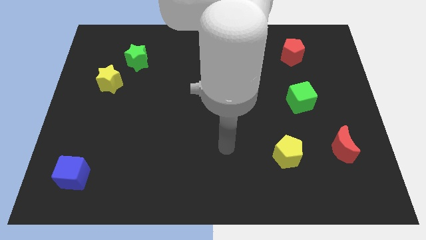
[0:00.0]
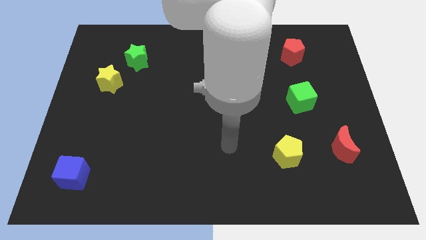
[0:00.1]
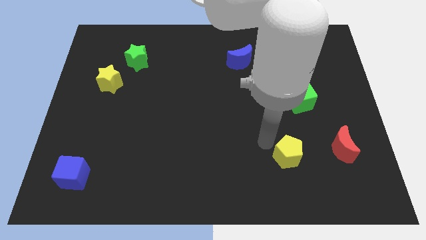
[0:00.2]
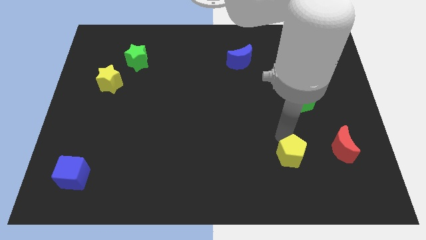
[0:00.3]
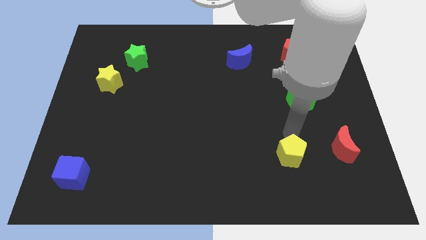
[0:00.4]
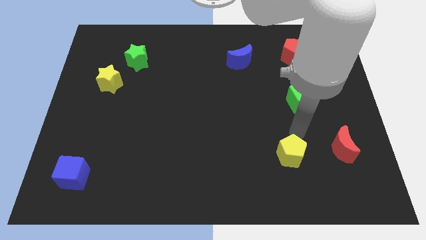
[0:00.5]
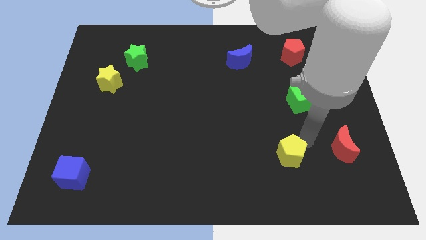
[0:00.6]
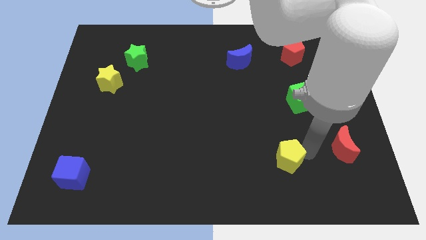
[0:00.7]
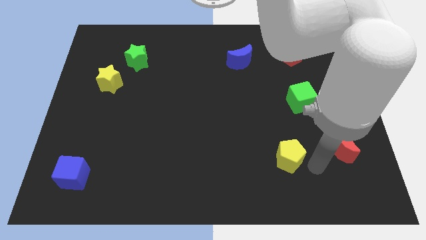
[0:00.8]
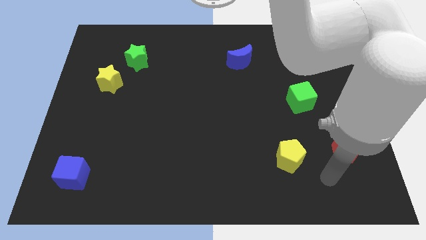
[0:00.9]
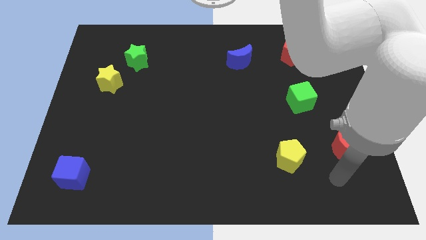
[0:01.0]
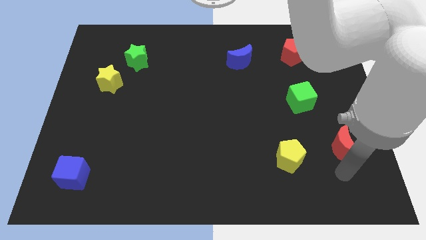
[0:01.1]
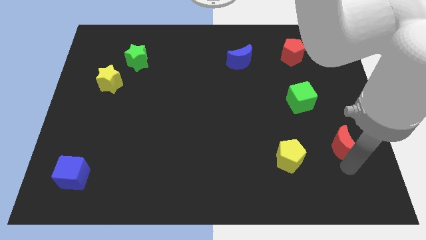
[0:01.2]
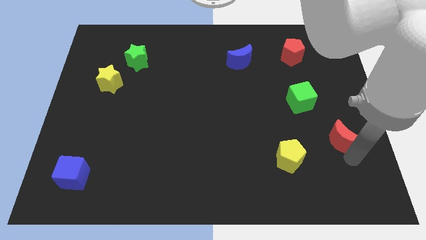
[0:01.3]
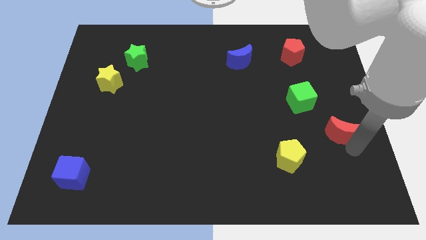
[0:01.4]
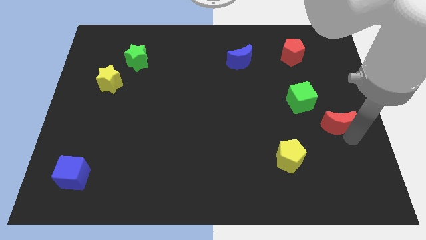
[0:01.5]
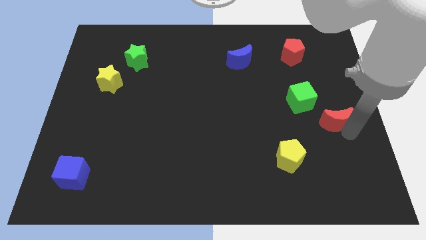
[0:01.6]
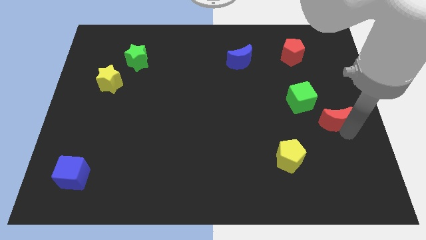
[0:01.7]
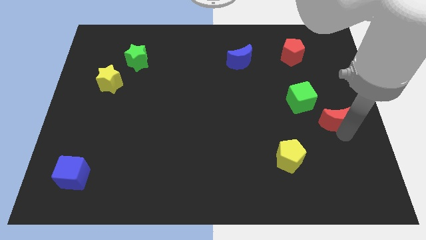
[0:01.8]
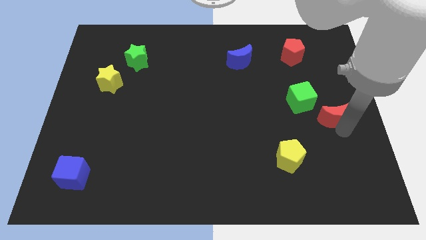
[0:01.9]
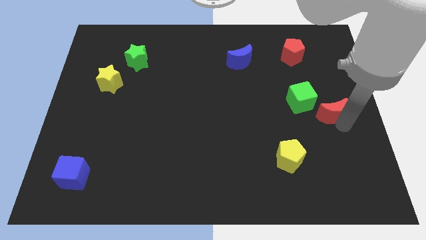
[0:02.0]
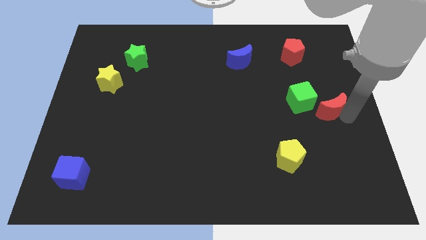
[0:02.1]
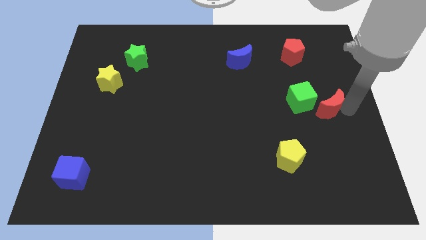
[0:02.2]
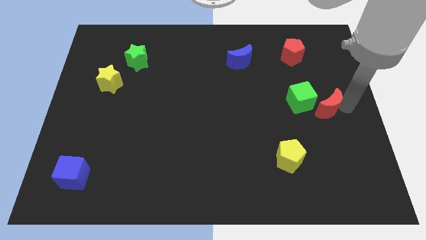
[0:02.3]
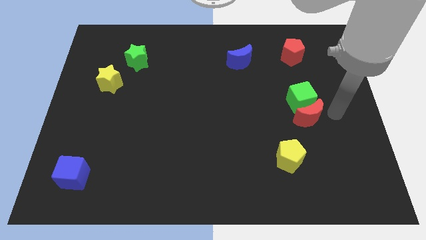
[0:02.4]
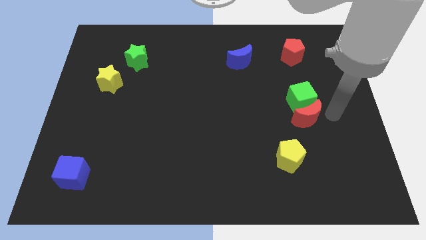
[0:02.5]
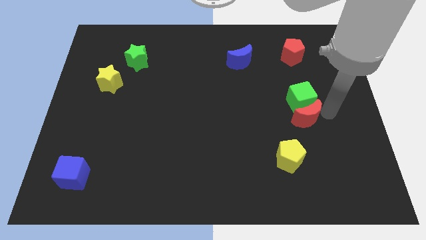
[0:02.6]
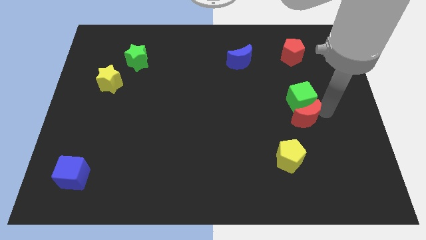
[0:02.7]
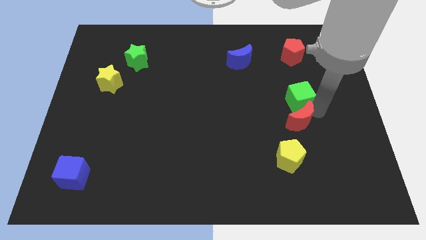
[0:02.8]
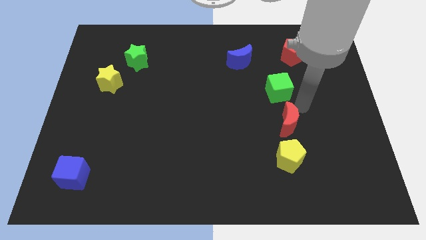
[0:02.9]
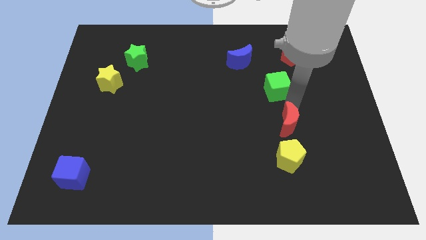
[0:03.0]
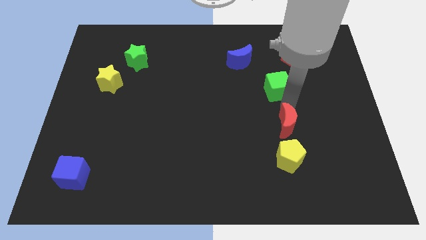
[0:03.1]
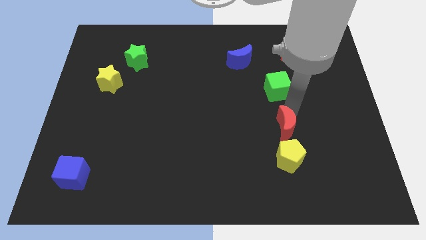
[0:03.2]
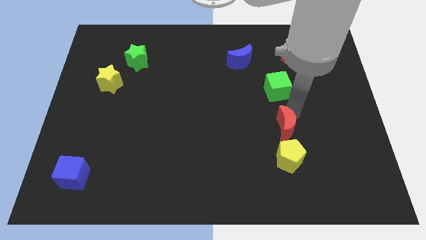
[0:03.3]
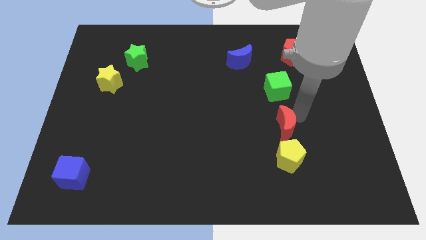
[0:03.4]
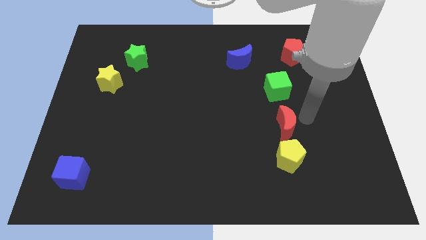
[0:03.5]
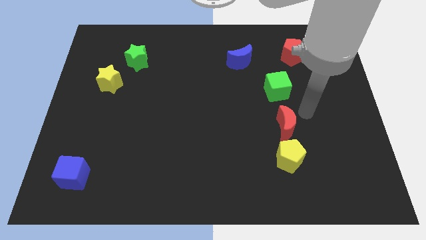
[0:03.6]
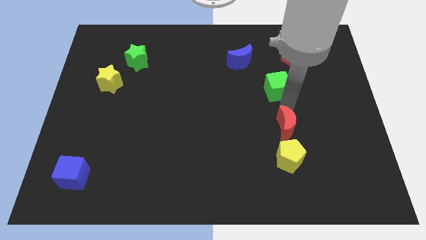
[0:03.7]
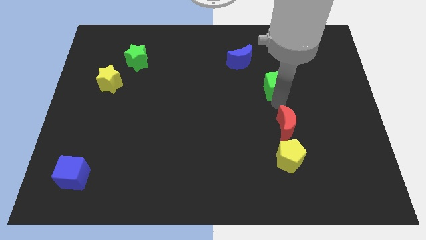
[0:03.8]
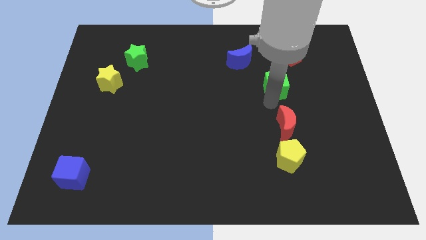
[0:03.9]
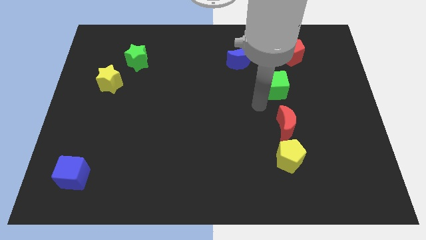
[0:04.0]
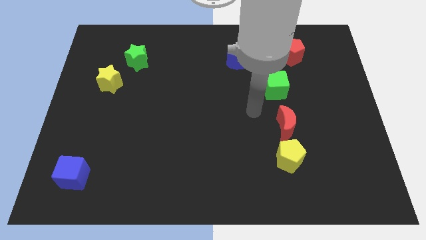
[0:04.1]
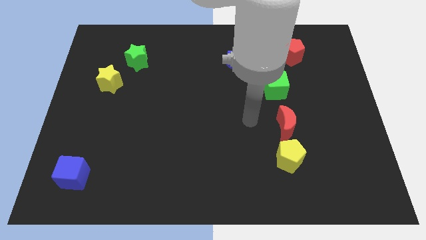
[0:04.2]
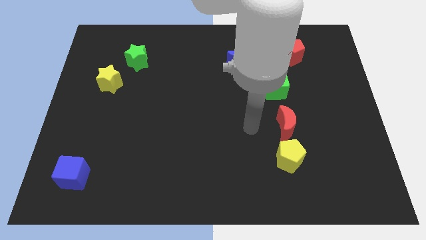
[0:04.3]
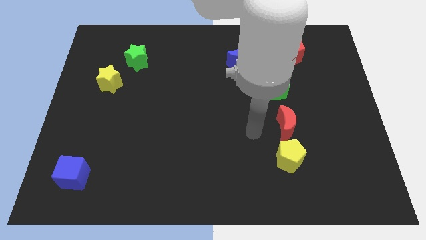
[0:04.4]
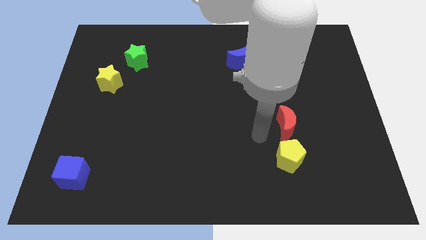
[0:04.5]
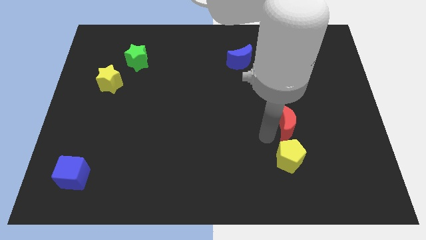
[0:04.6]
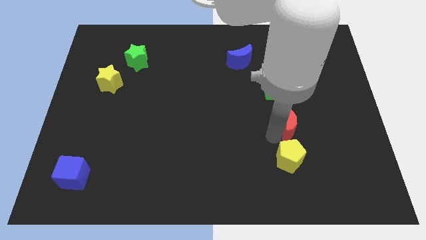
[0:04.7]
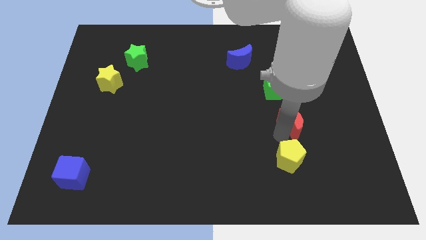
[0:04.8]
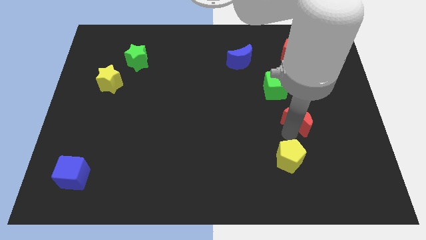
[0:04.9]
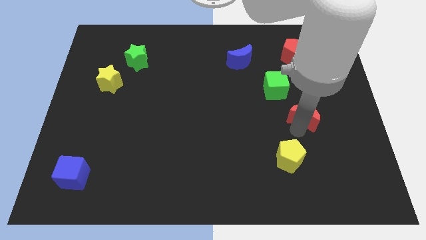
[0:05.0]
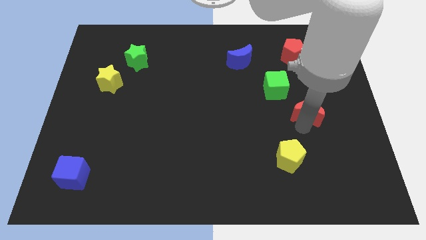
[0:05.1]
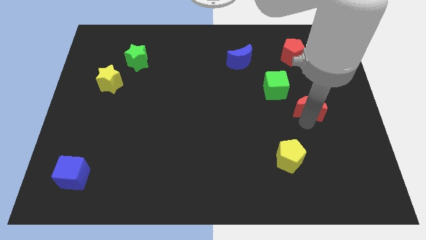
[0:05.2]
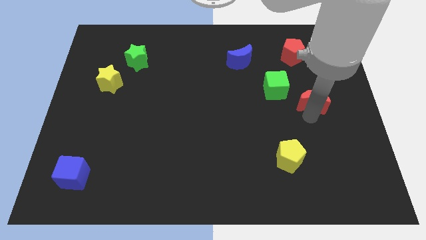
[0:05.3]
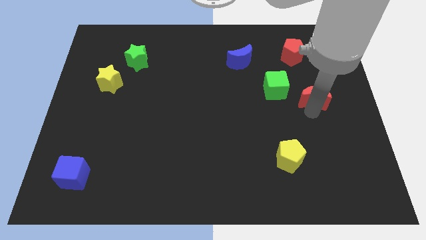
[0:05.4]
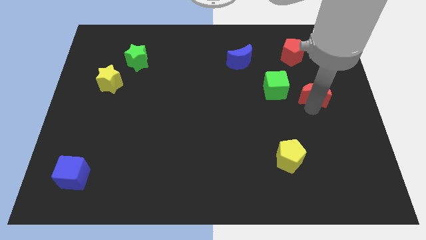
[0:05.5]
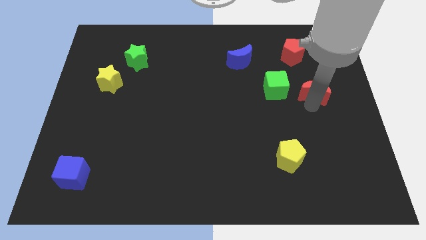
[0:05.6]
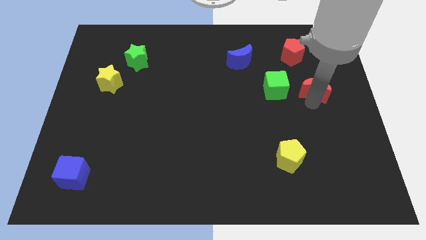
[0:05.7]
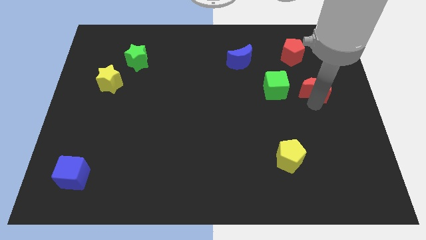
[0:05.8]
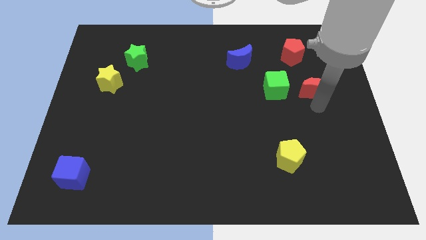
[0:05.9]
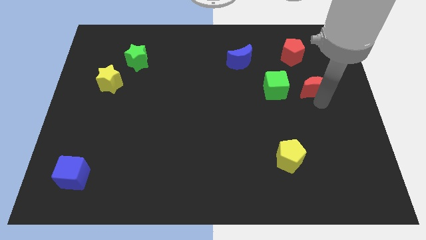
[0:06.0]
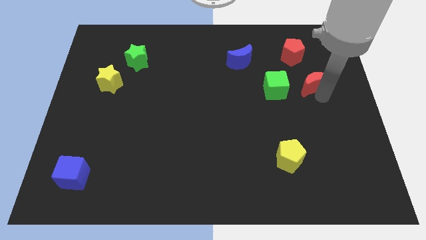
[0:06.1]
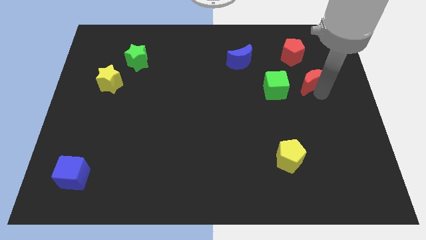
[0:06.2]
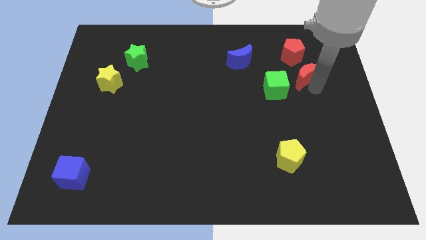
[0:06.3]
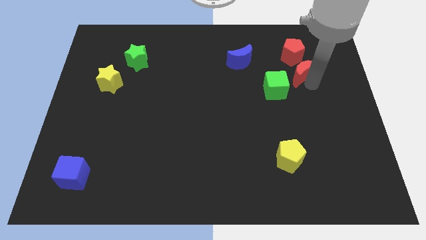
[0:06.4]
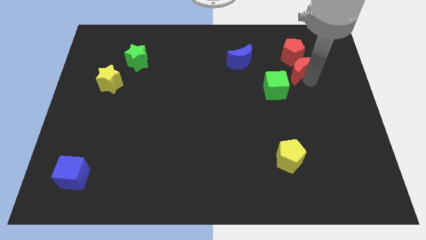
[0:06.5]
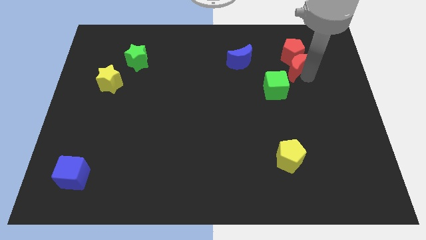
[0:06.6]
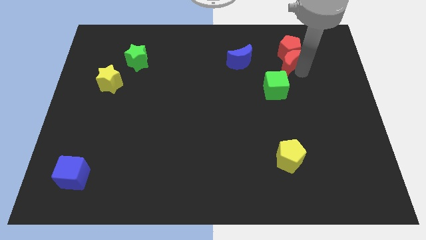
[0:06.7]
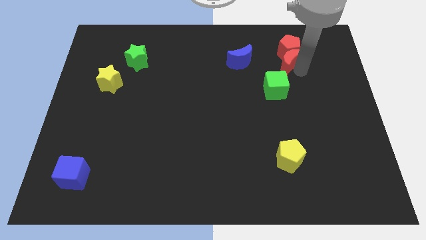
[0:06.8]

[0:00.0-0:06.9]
slide the red moon towards the red pentagon

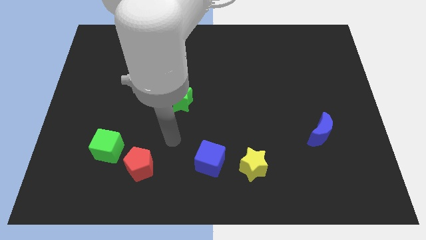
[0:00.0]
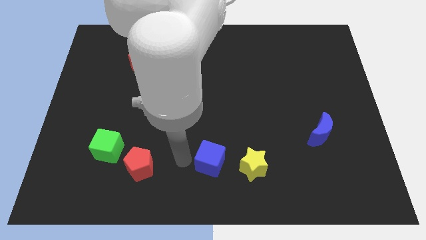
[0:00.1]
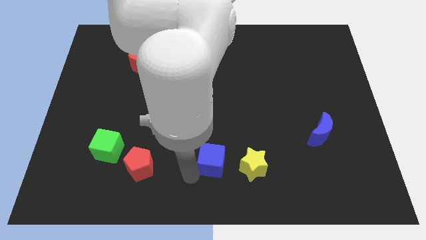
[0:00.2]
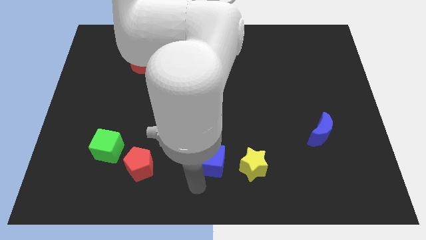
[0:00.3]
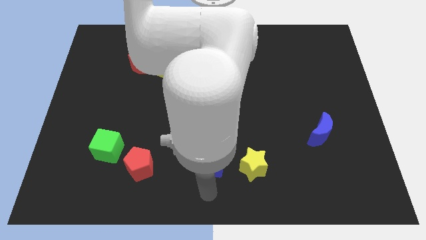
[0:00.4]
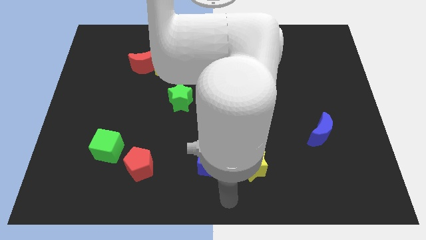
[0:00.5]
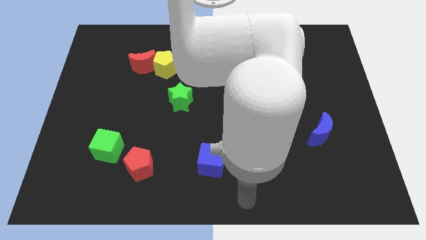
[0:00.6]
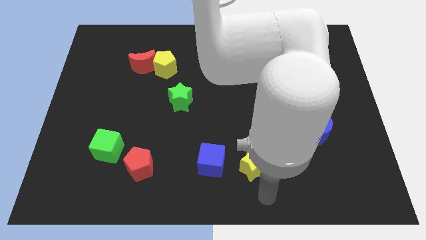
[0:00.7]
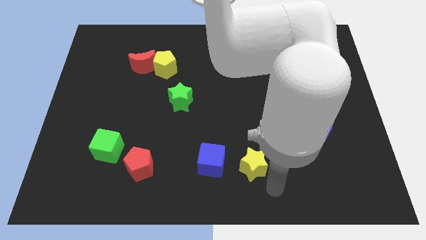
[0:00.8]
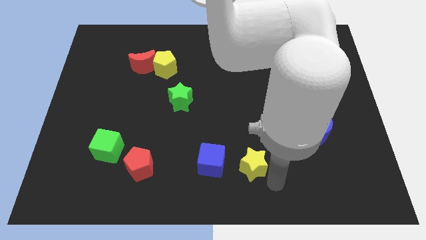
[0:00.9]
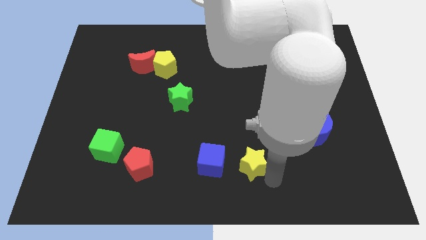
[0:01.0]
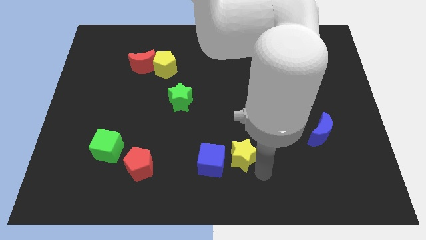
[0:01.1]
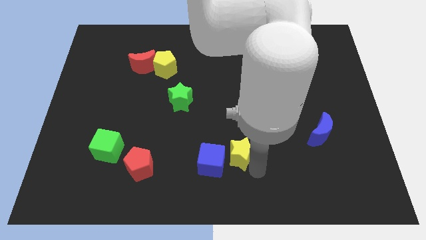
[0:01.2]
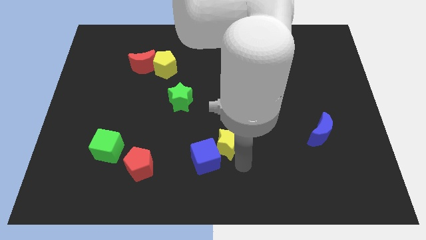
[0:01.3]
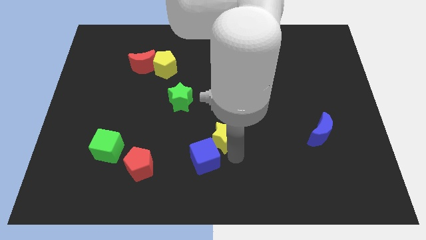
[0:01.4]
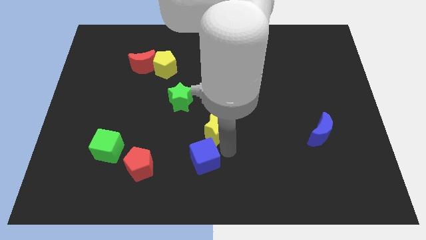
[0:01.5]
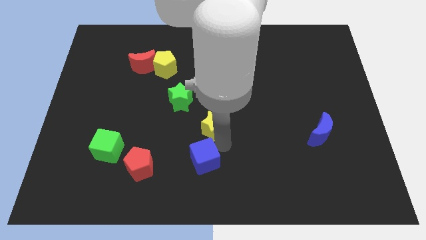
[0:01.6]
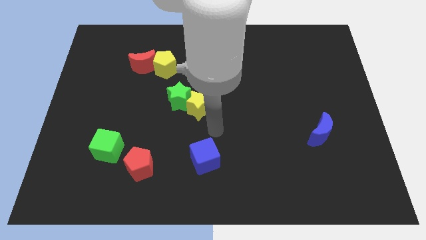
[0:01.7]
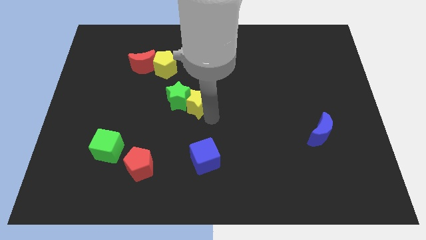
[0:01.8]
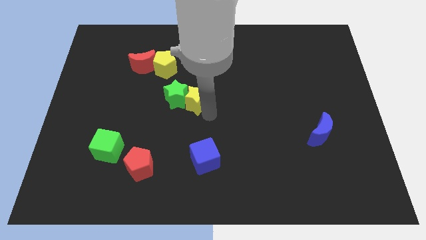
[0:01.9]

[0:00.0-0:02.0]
slide the yellow star next to the green star
